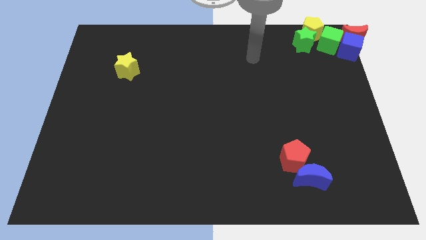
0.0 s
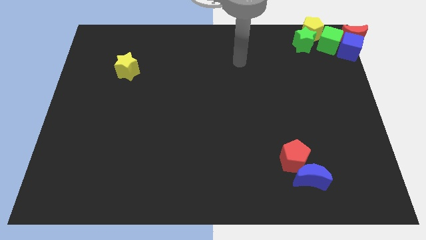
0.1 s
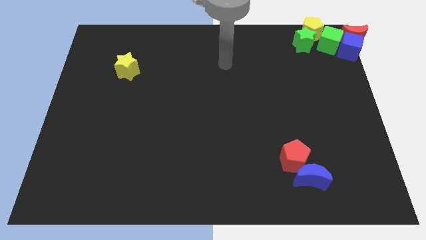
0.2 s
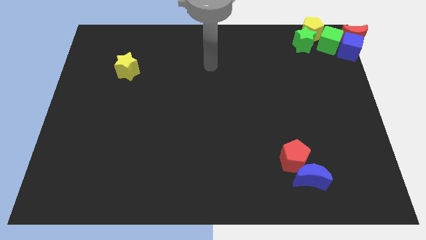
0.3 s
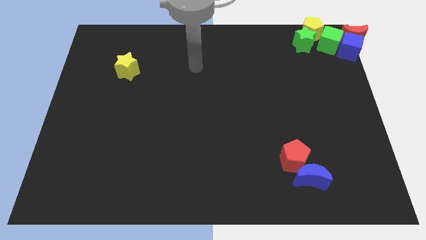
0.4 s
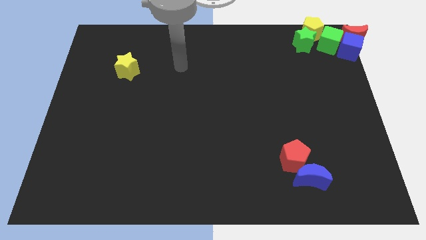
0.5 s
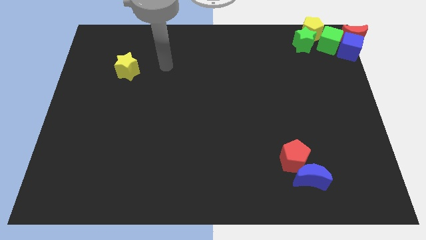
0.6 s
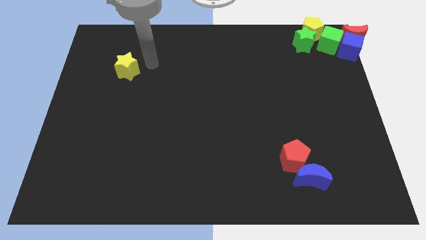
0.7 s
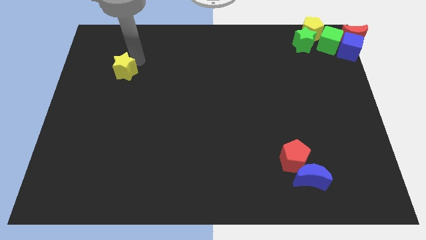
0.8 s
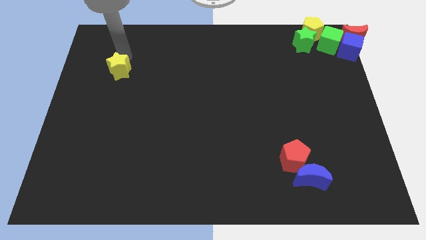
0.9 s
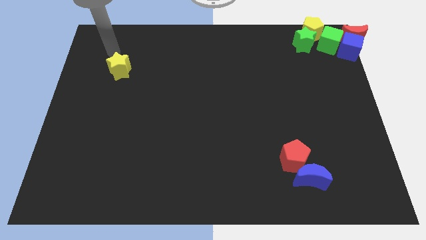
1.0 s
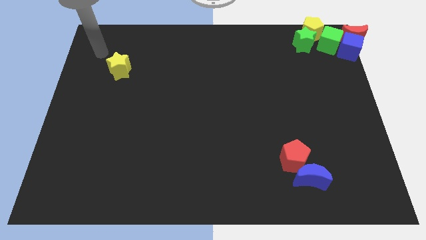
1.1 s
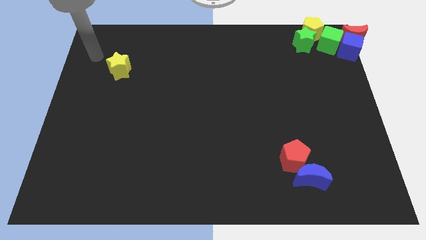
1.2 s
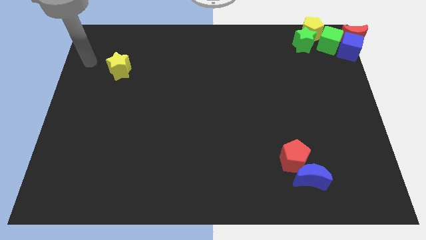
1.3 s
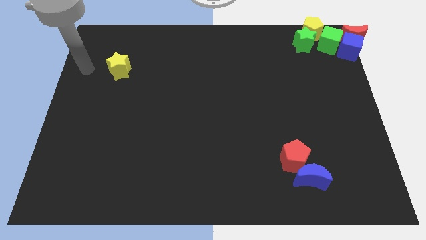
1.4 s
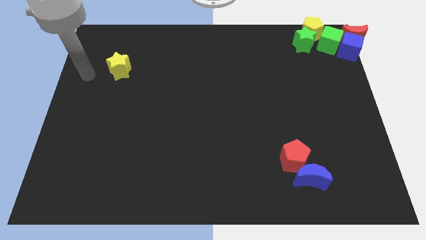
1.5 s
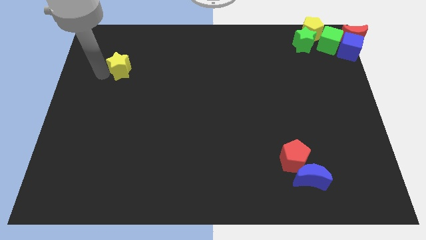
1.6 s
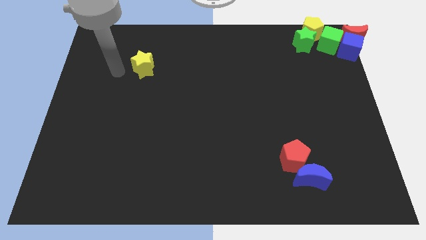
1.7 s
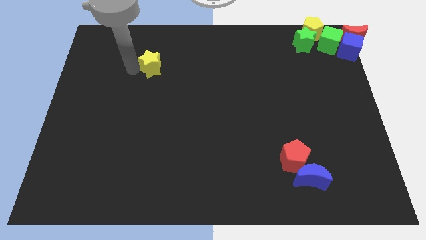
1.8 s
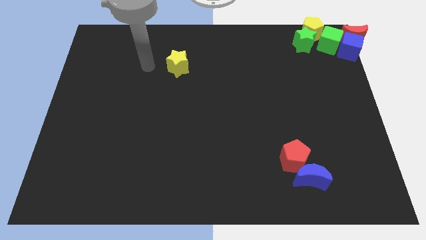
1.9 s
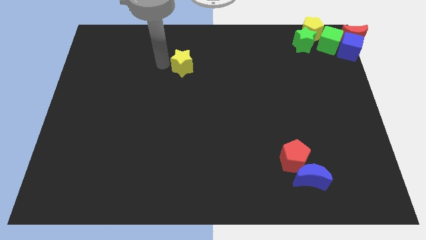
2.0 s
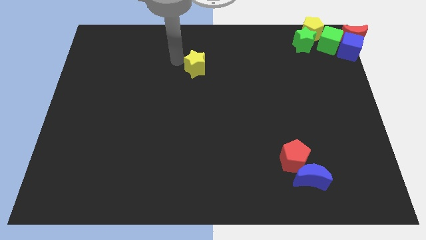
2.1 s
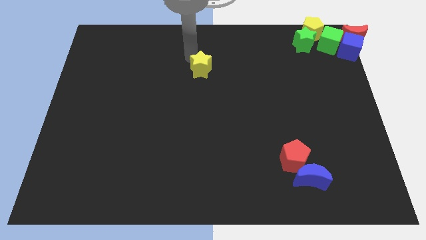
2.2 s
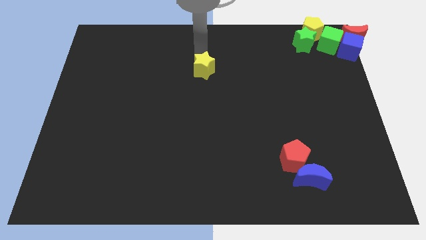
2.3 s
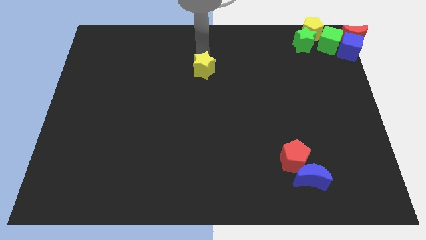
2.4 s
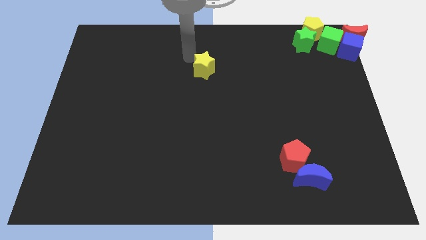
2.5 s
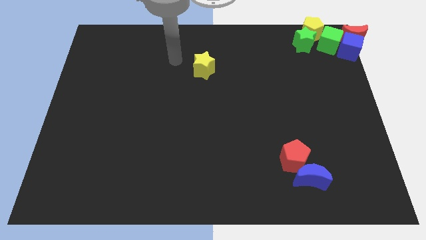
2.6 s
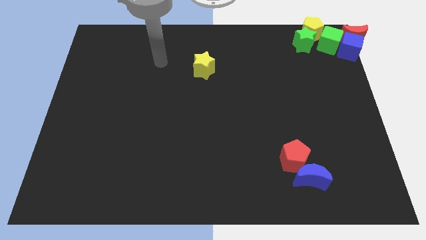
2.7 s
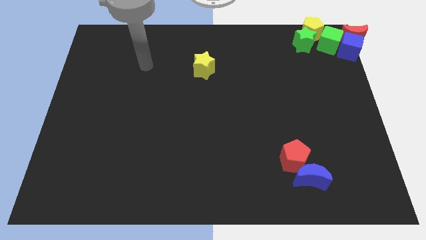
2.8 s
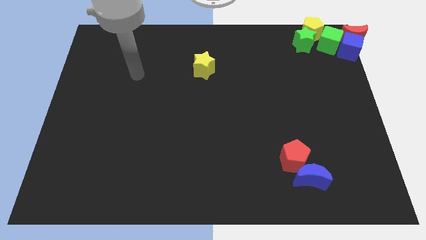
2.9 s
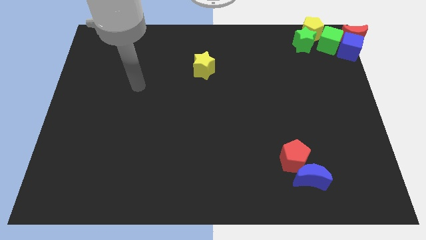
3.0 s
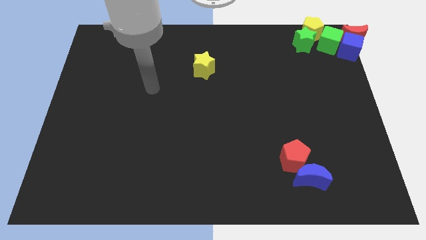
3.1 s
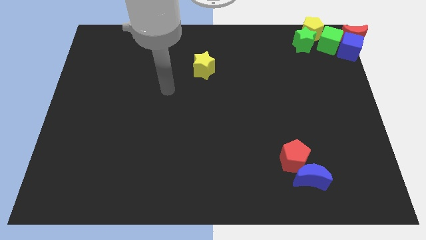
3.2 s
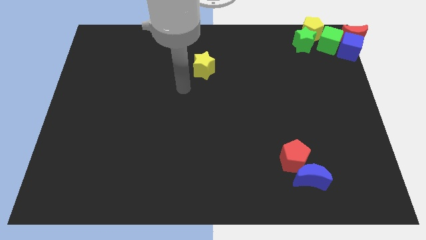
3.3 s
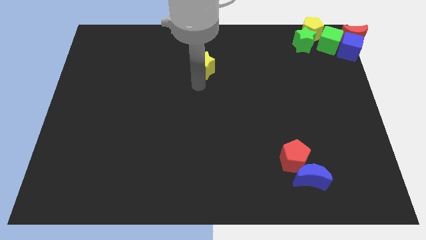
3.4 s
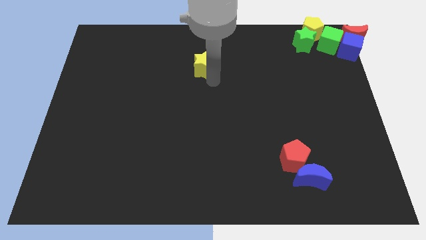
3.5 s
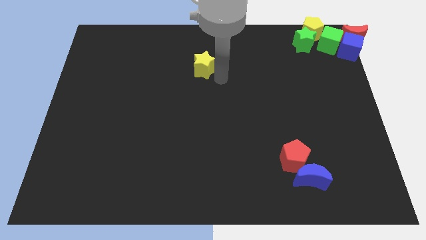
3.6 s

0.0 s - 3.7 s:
slightly push the yellow star towards the right side of the board

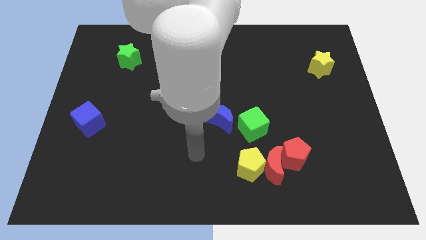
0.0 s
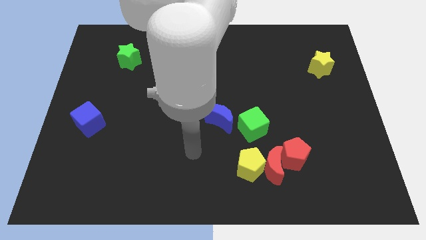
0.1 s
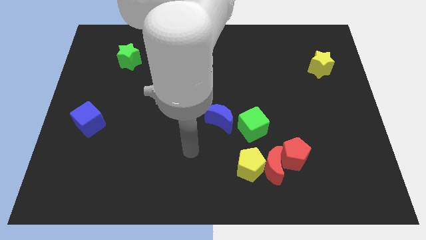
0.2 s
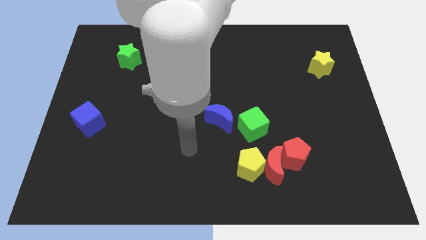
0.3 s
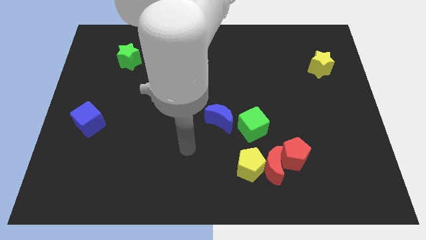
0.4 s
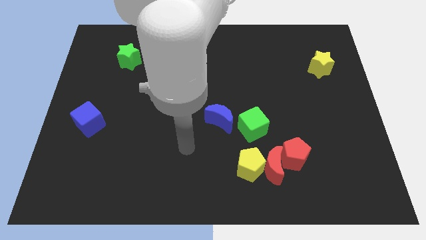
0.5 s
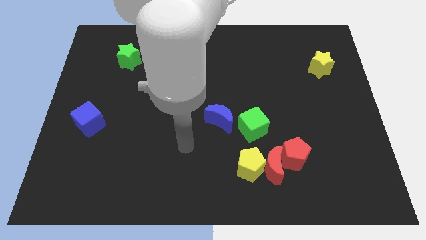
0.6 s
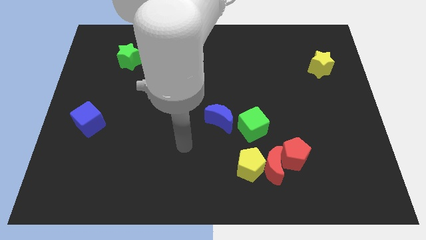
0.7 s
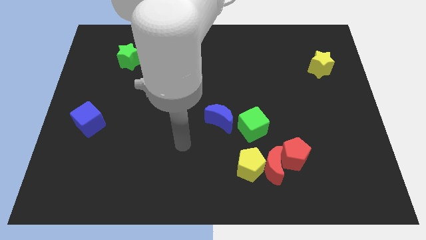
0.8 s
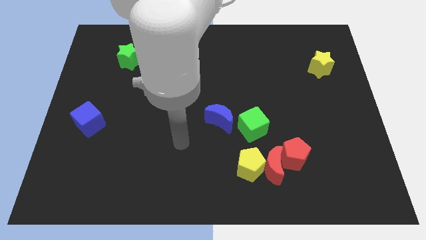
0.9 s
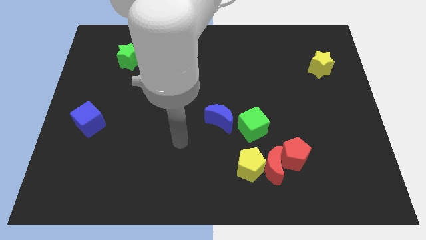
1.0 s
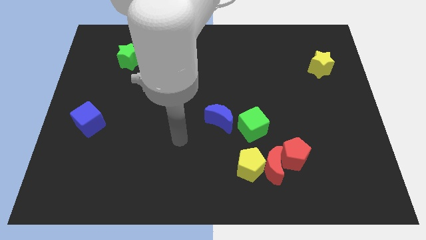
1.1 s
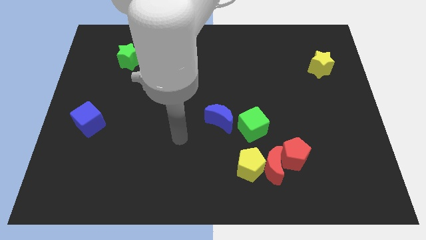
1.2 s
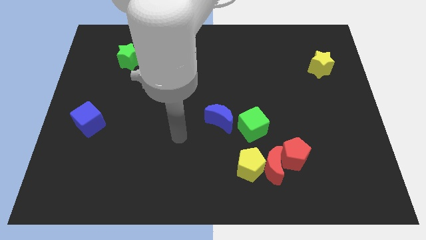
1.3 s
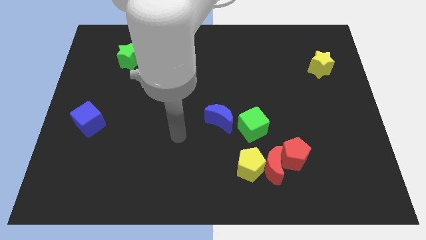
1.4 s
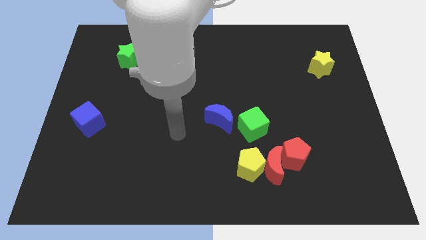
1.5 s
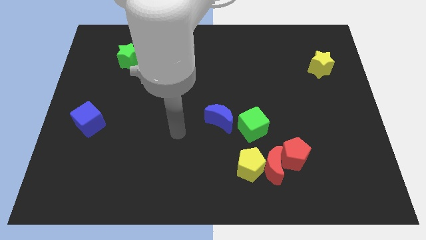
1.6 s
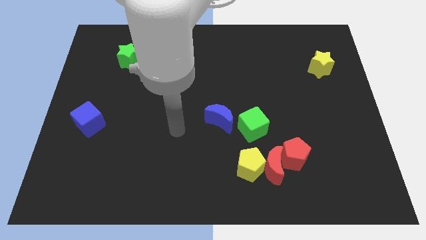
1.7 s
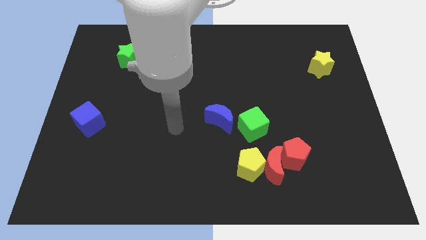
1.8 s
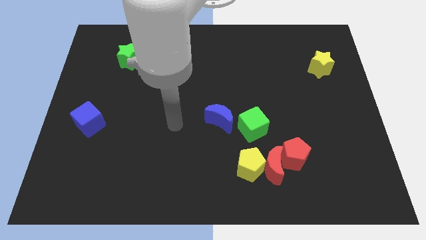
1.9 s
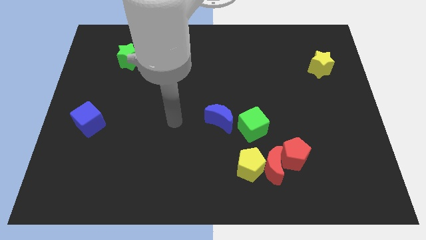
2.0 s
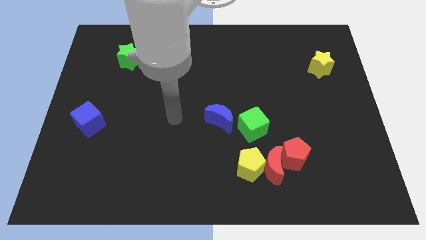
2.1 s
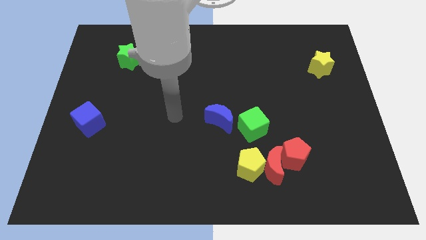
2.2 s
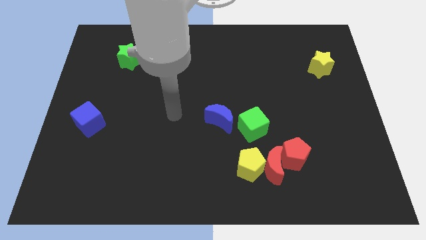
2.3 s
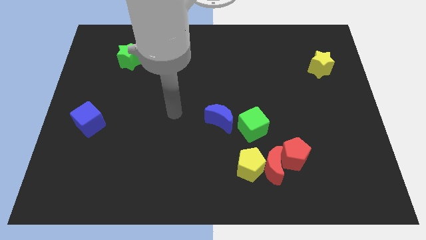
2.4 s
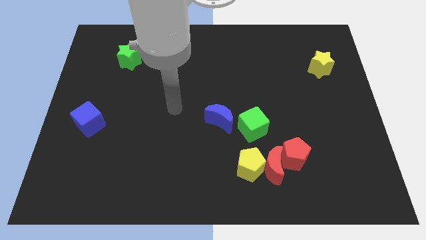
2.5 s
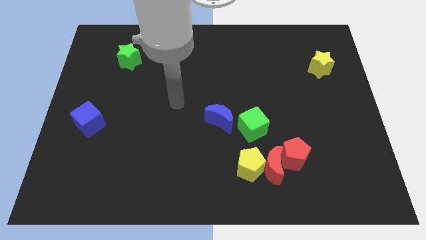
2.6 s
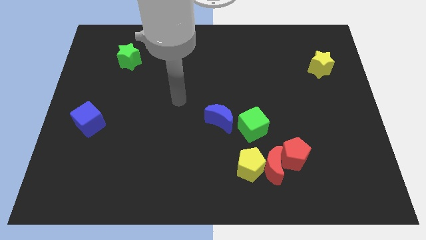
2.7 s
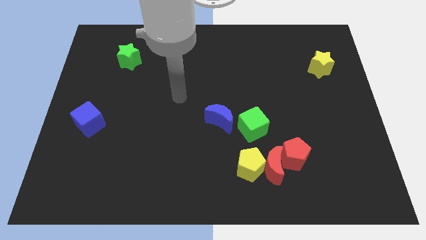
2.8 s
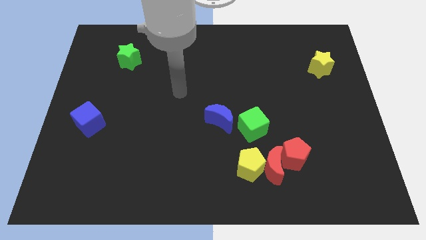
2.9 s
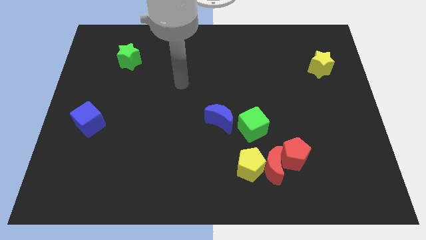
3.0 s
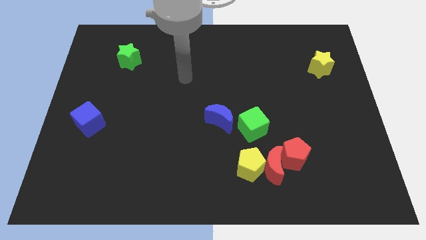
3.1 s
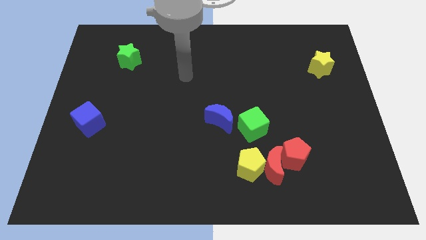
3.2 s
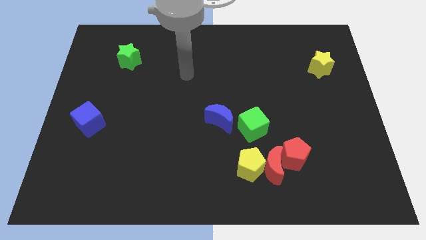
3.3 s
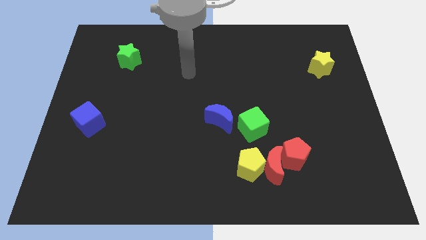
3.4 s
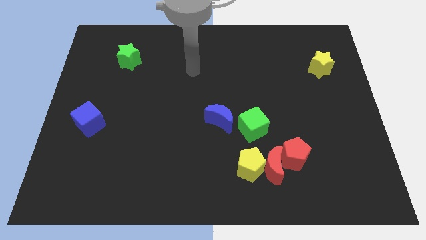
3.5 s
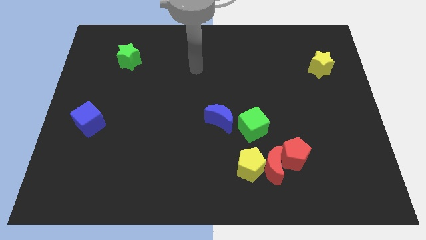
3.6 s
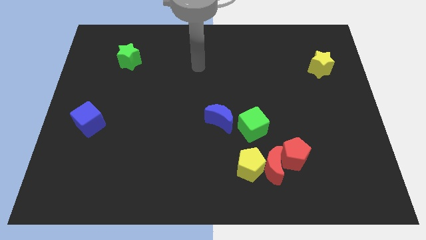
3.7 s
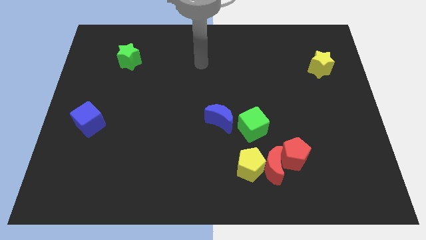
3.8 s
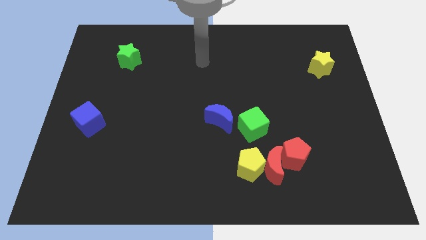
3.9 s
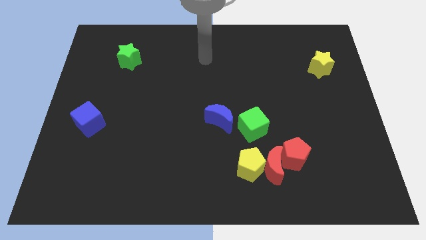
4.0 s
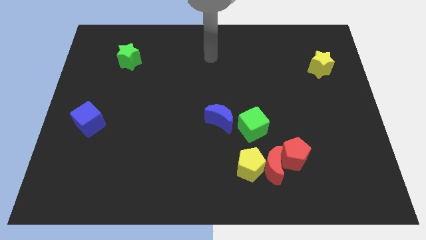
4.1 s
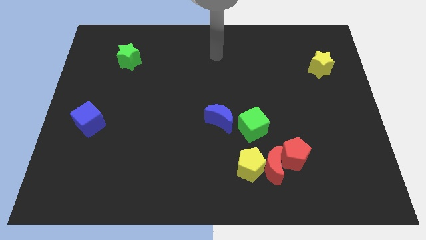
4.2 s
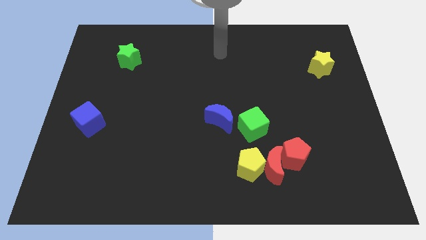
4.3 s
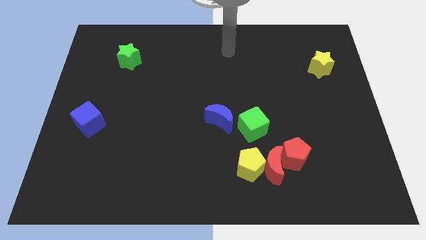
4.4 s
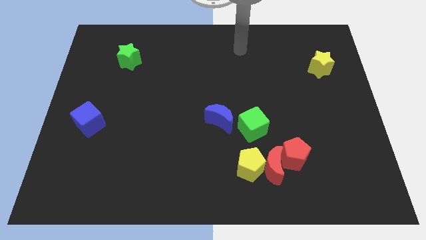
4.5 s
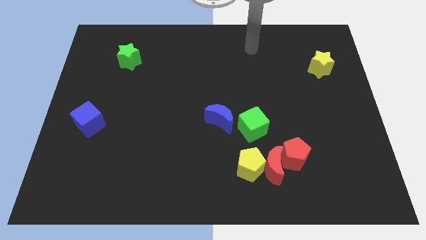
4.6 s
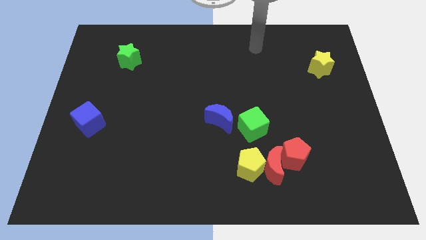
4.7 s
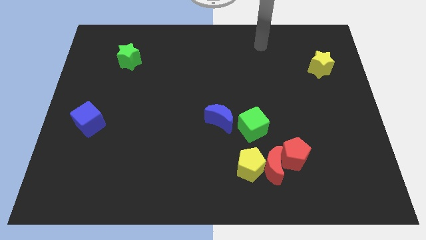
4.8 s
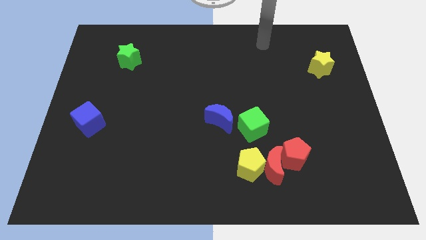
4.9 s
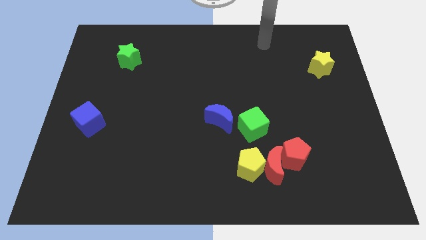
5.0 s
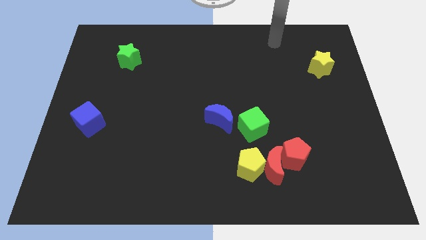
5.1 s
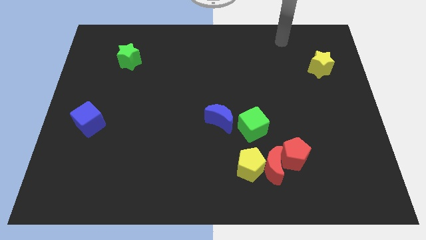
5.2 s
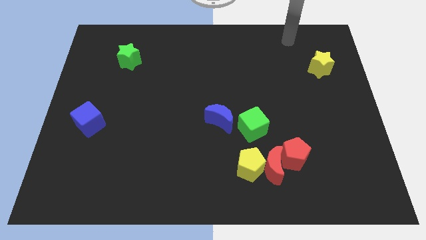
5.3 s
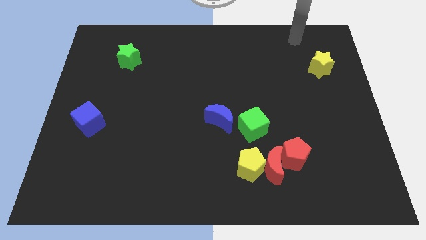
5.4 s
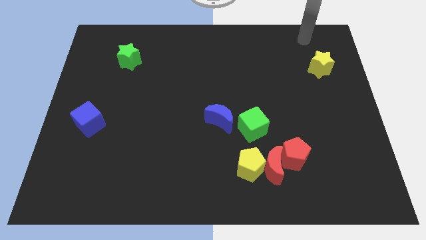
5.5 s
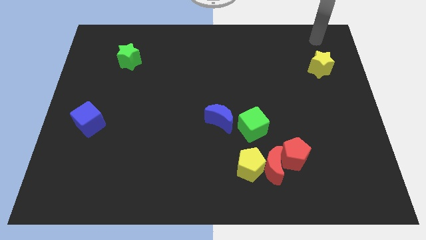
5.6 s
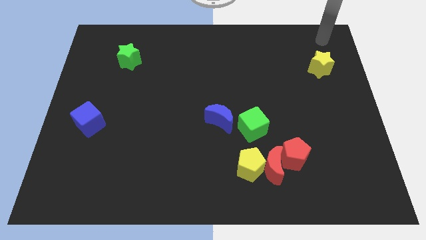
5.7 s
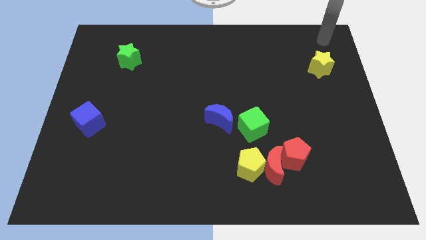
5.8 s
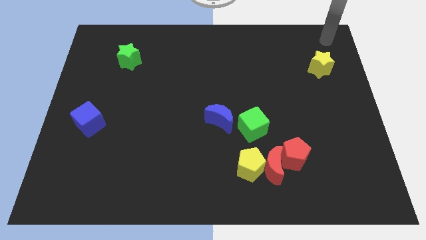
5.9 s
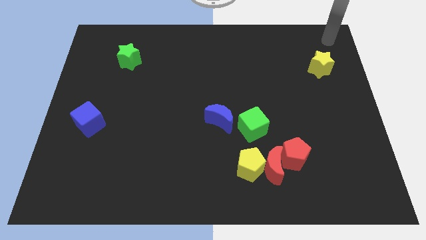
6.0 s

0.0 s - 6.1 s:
point the arm above the yellow star
